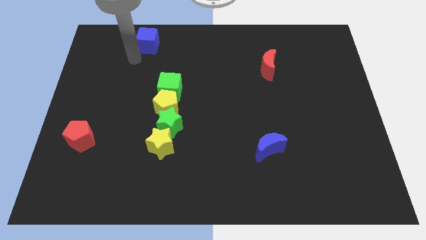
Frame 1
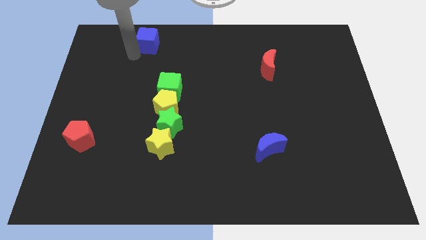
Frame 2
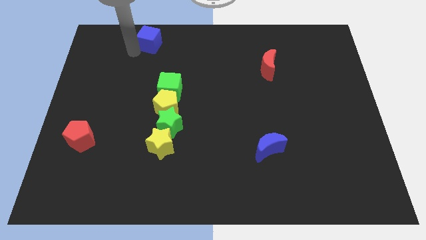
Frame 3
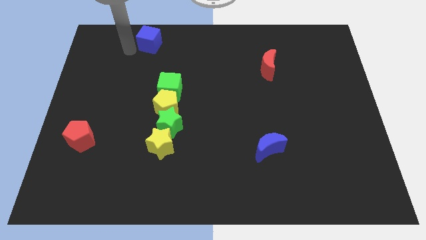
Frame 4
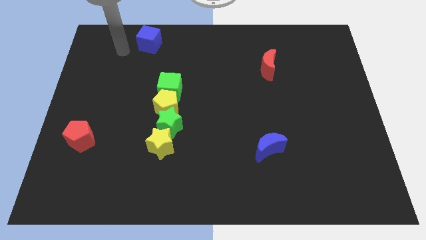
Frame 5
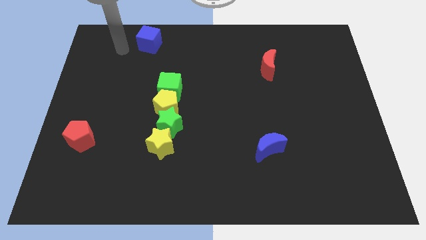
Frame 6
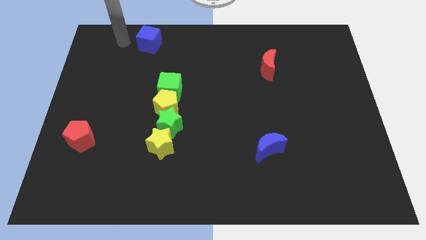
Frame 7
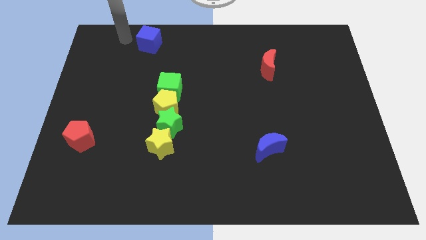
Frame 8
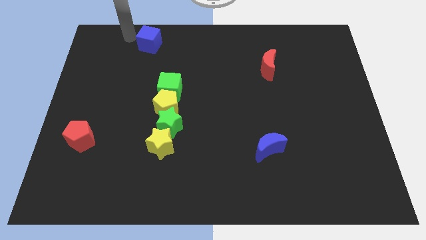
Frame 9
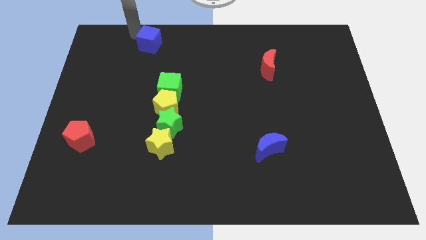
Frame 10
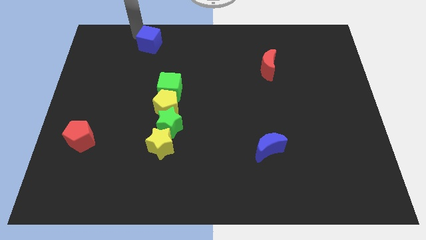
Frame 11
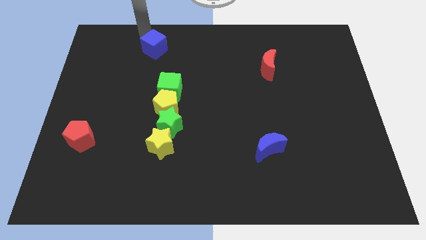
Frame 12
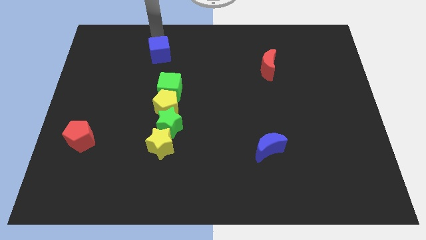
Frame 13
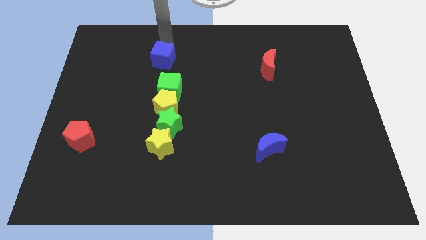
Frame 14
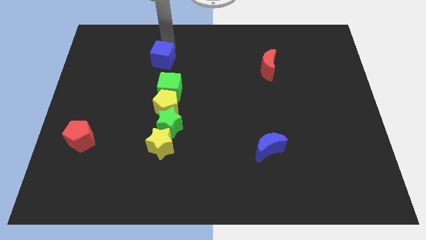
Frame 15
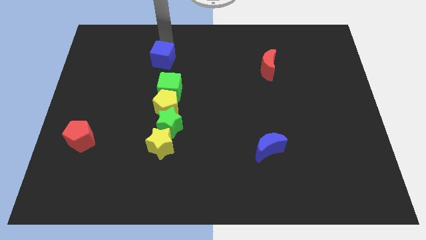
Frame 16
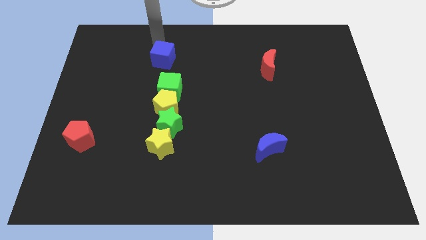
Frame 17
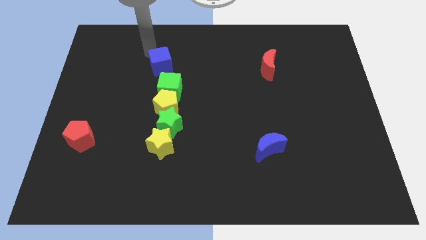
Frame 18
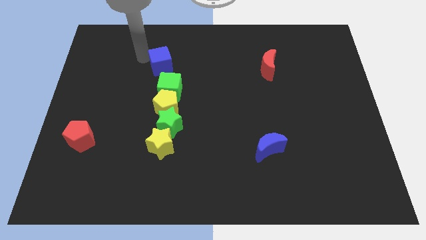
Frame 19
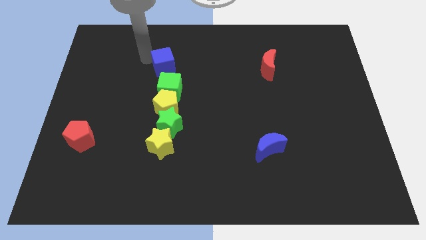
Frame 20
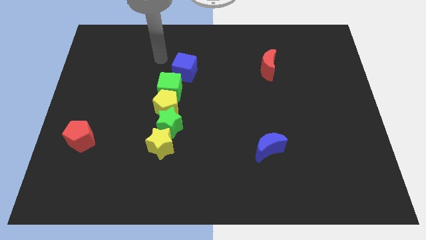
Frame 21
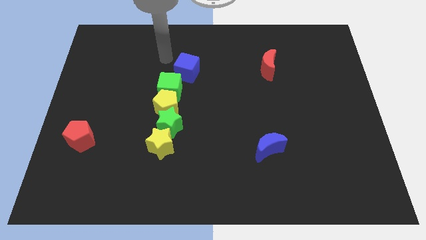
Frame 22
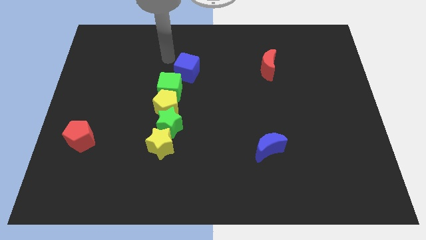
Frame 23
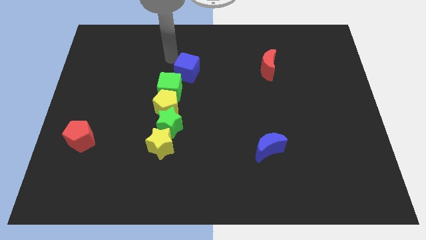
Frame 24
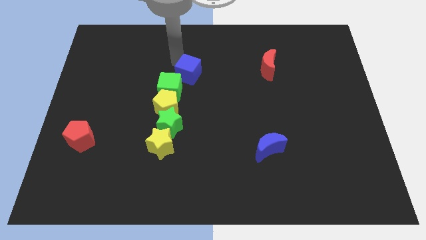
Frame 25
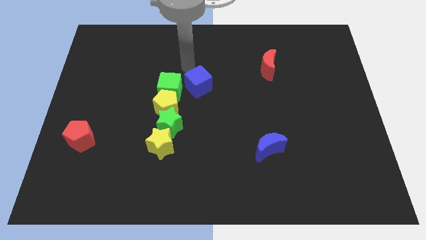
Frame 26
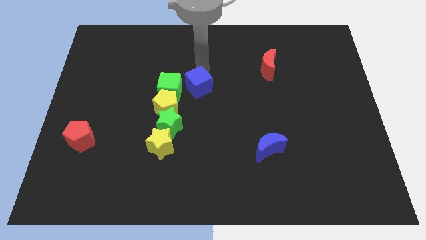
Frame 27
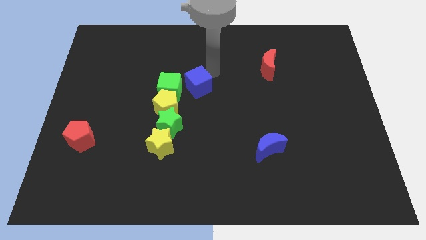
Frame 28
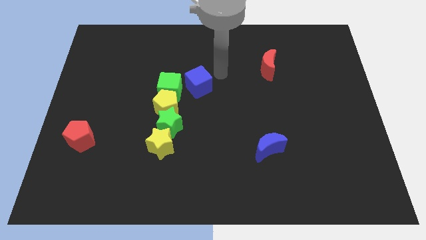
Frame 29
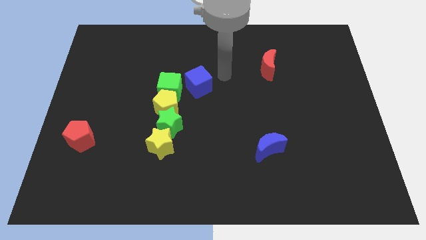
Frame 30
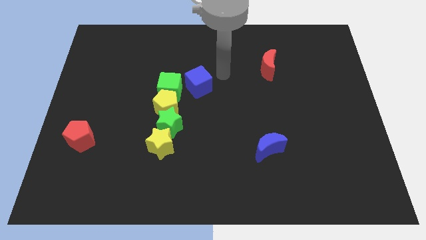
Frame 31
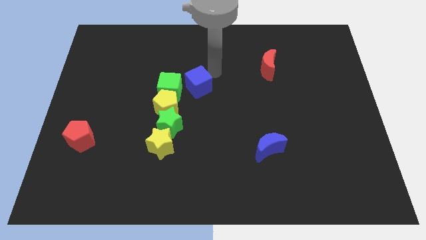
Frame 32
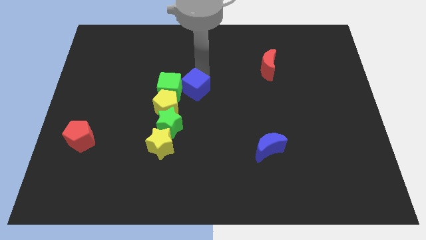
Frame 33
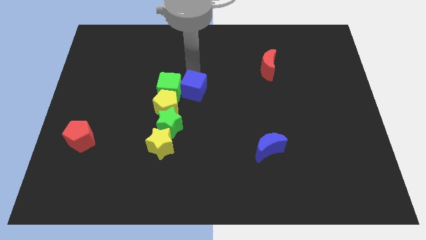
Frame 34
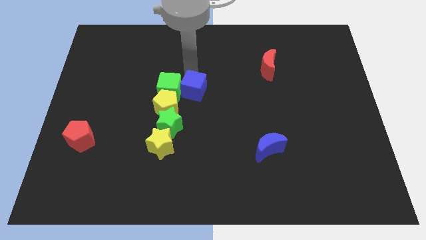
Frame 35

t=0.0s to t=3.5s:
push the blue cube on the right side of the green cube

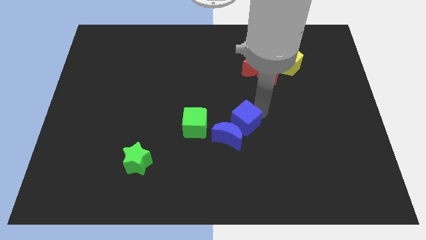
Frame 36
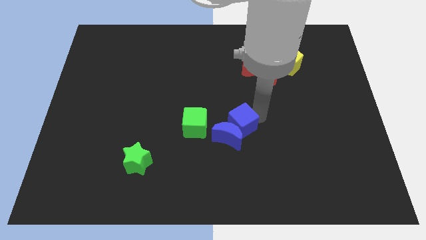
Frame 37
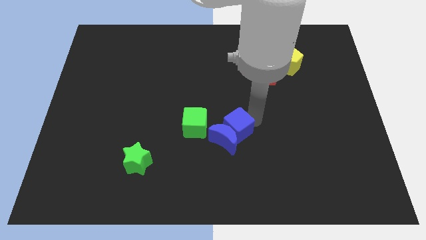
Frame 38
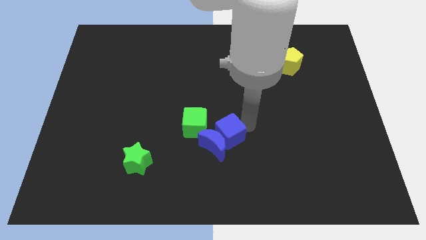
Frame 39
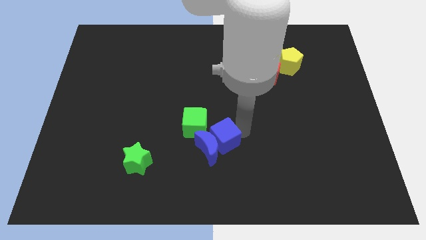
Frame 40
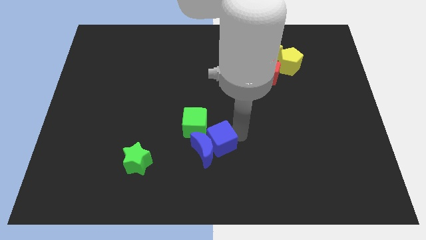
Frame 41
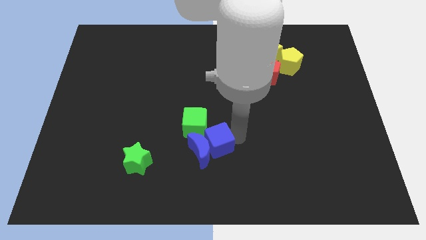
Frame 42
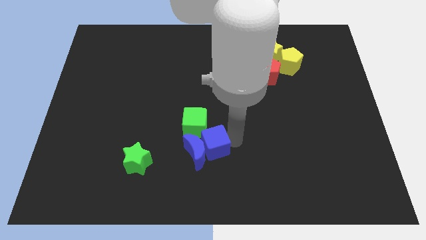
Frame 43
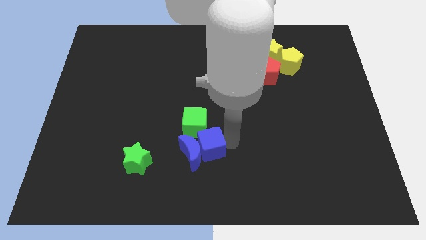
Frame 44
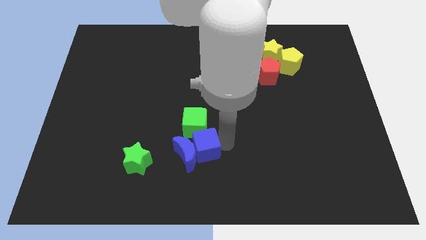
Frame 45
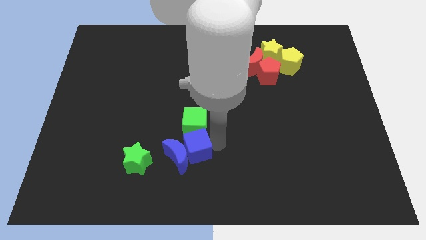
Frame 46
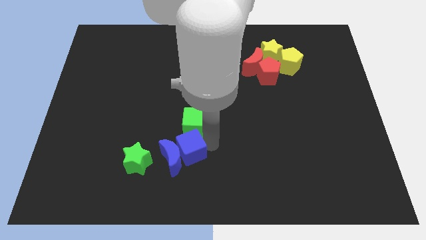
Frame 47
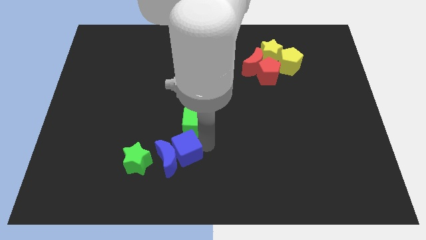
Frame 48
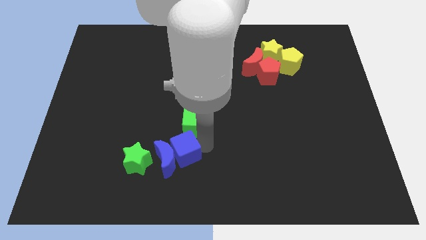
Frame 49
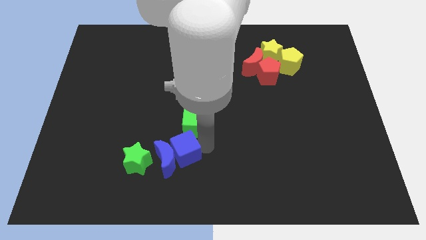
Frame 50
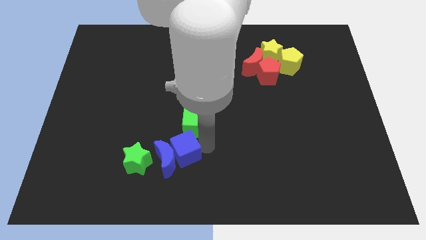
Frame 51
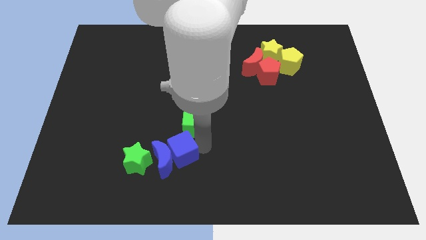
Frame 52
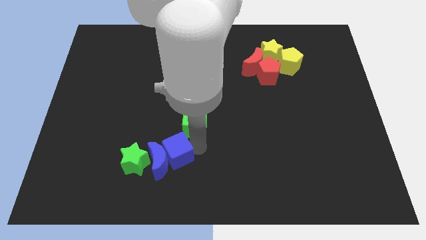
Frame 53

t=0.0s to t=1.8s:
push the blue blocks to the right of the green star

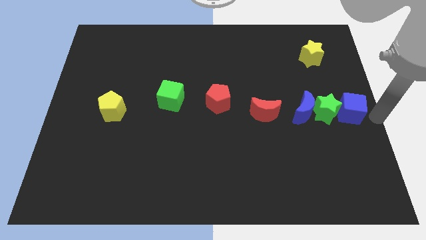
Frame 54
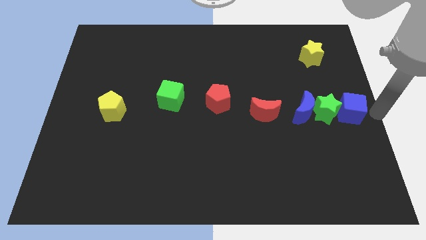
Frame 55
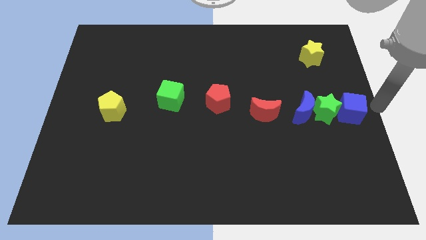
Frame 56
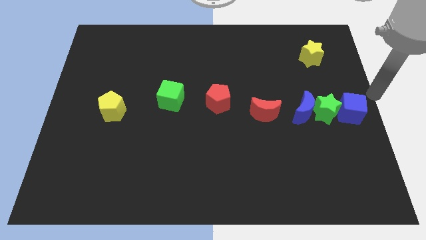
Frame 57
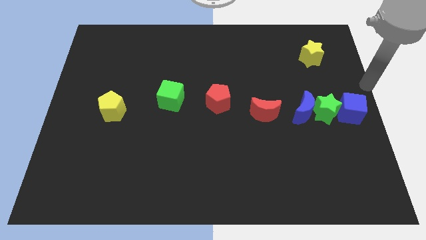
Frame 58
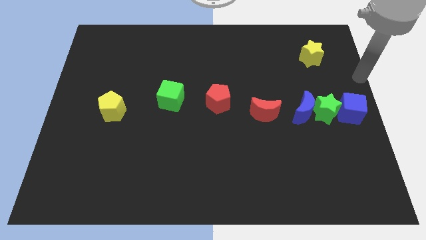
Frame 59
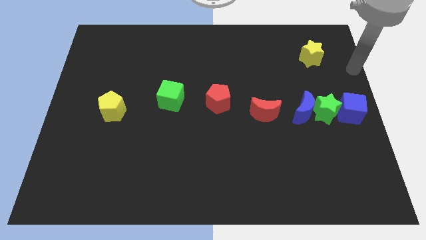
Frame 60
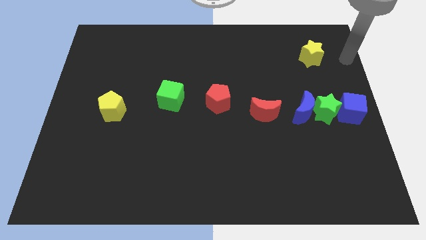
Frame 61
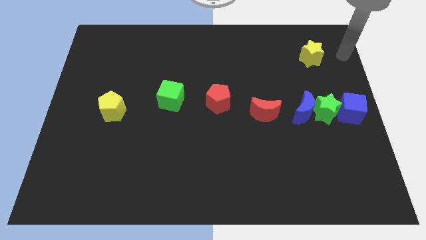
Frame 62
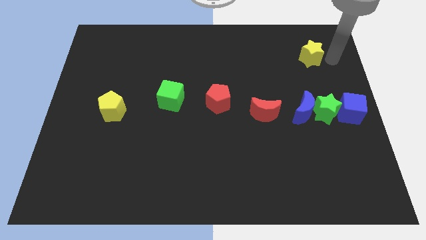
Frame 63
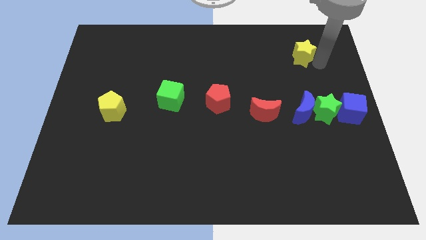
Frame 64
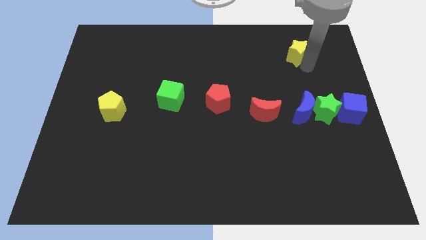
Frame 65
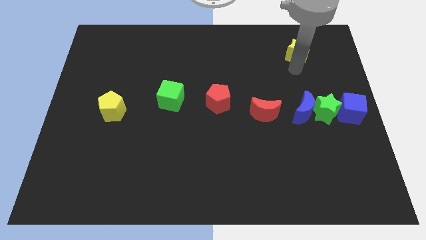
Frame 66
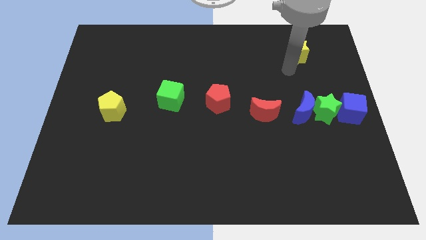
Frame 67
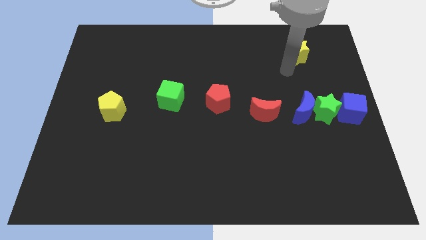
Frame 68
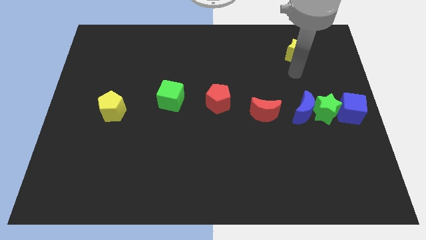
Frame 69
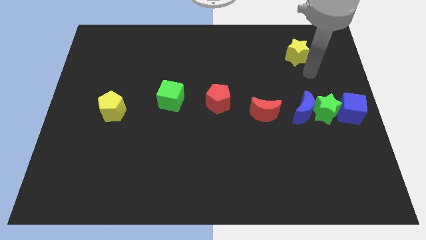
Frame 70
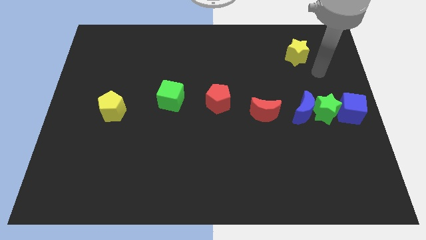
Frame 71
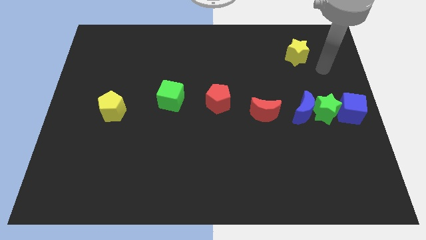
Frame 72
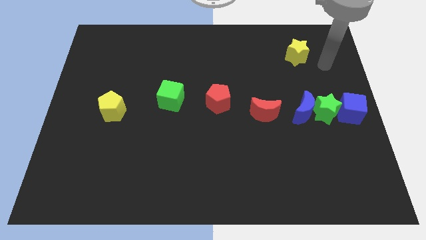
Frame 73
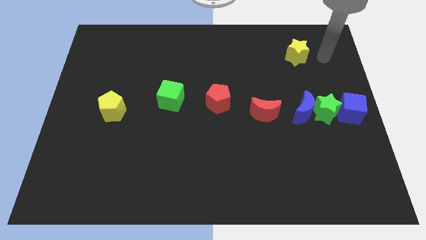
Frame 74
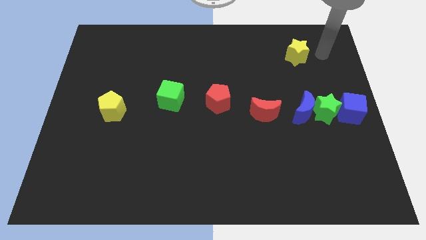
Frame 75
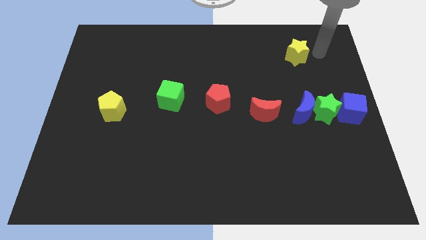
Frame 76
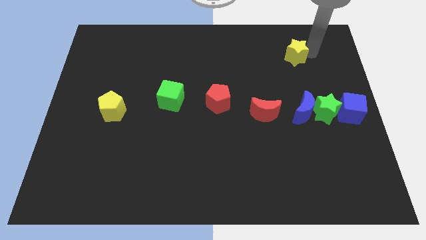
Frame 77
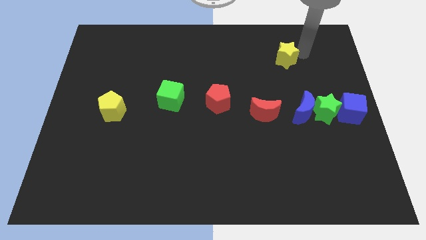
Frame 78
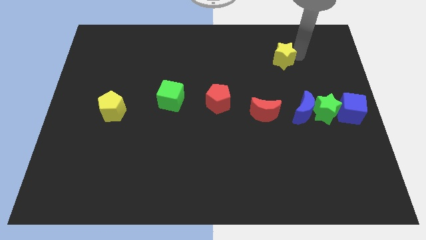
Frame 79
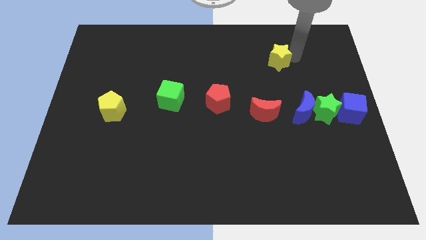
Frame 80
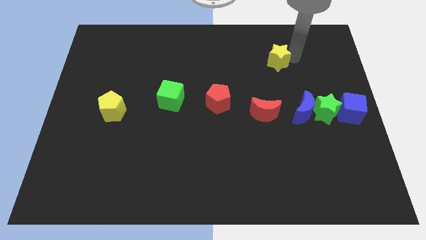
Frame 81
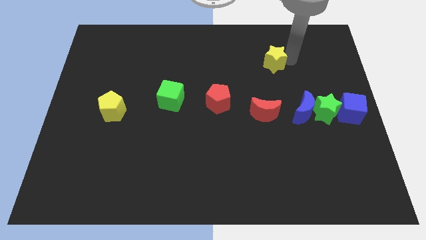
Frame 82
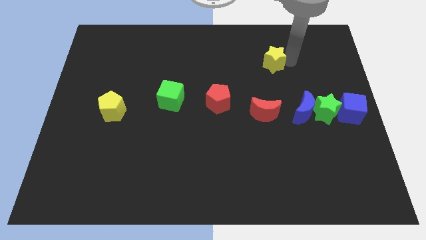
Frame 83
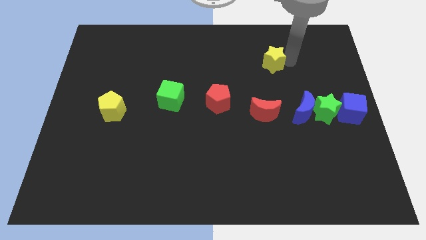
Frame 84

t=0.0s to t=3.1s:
move yellow star above red crescent

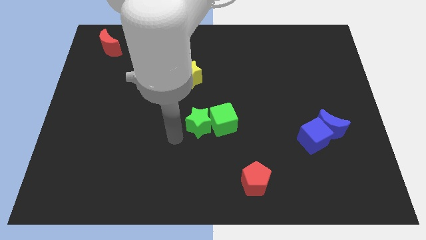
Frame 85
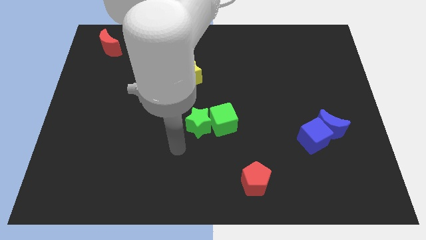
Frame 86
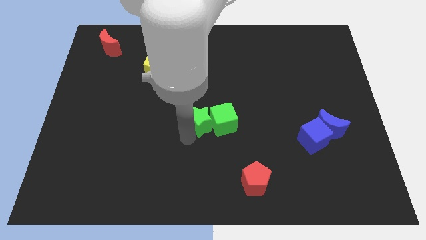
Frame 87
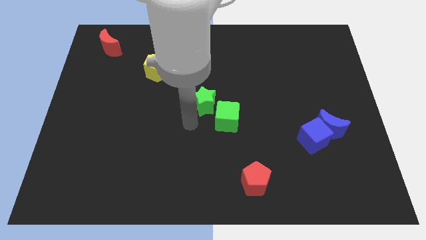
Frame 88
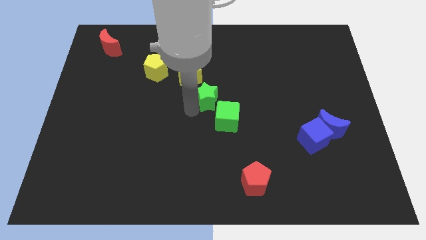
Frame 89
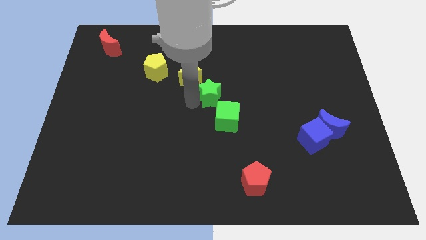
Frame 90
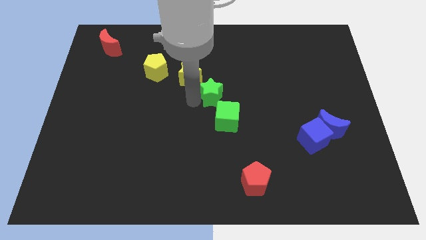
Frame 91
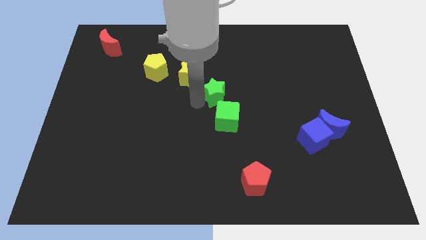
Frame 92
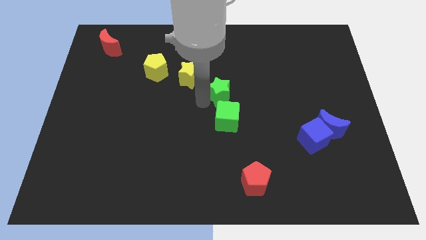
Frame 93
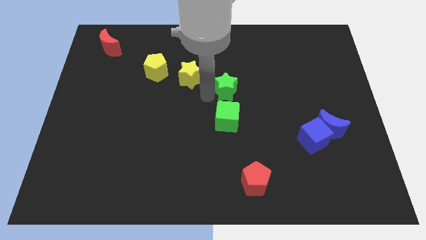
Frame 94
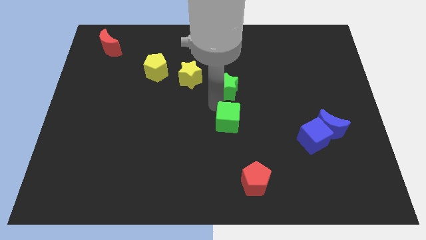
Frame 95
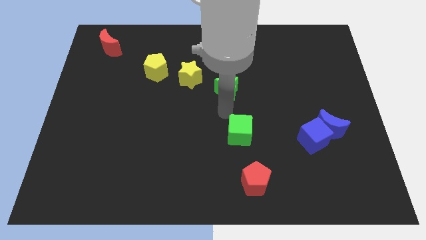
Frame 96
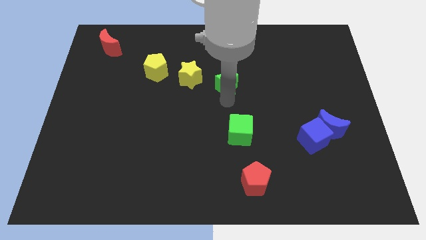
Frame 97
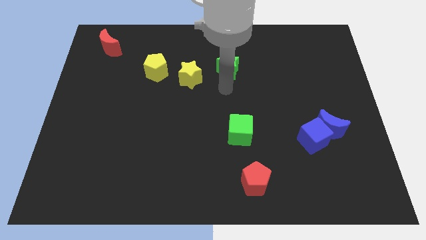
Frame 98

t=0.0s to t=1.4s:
slide the green star to the top left of the green cube
